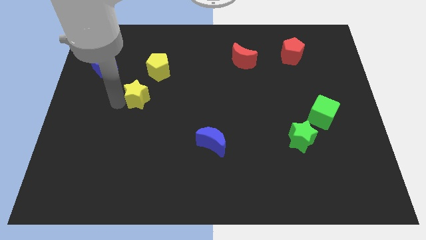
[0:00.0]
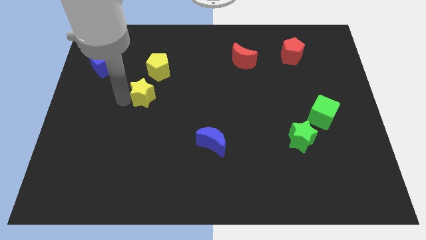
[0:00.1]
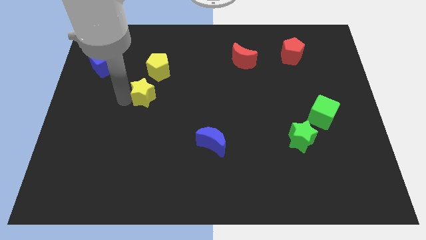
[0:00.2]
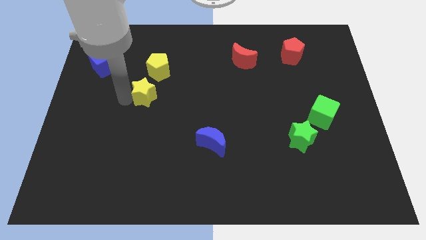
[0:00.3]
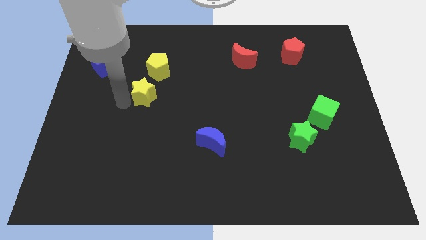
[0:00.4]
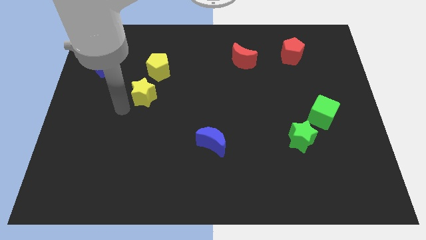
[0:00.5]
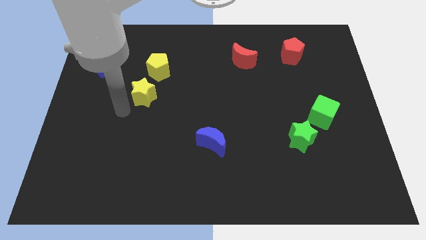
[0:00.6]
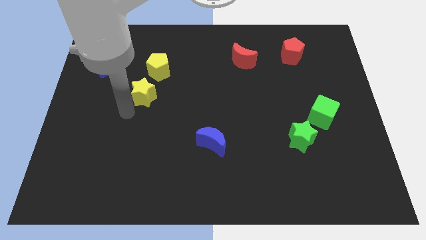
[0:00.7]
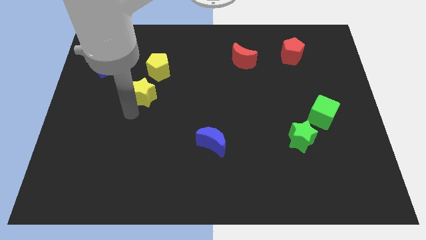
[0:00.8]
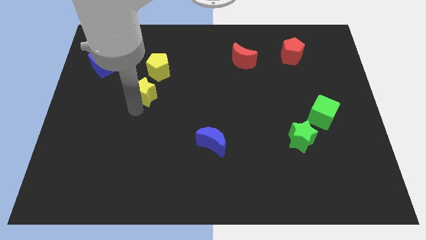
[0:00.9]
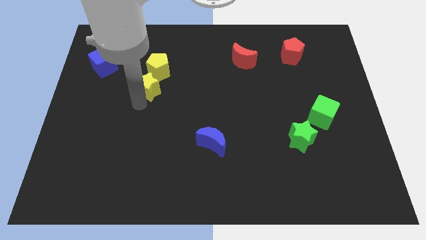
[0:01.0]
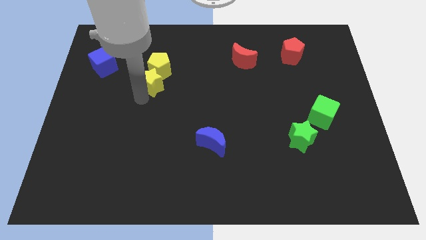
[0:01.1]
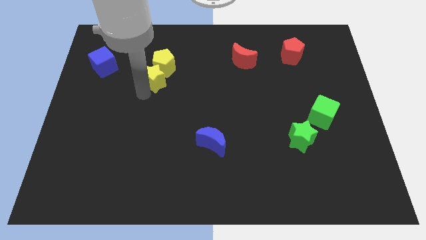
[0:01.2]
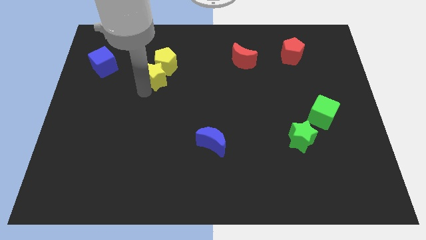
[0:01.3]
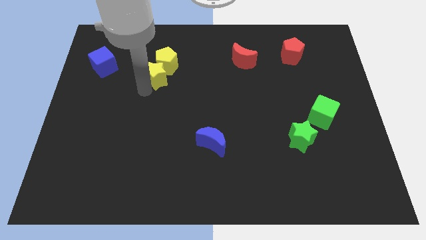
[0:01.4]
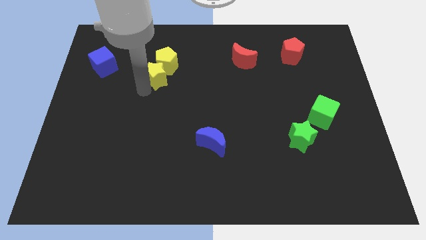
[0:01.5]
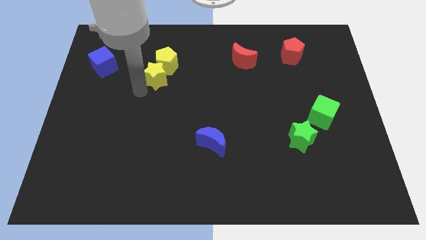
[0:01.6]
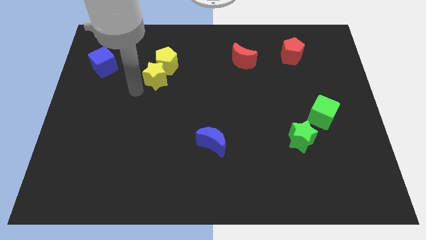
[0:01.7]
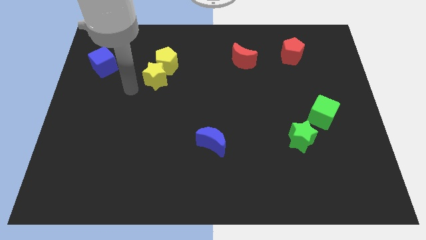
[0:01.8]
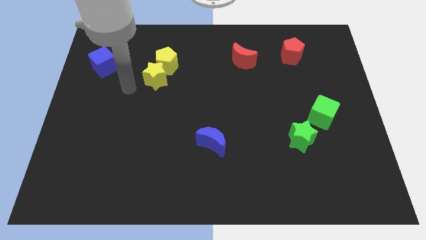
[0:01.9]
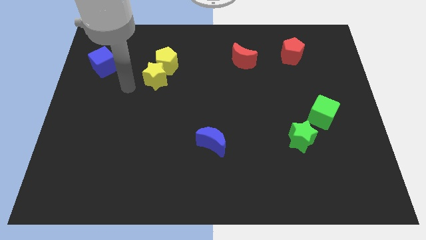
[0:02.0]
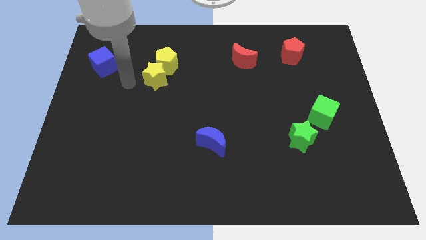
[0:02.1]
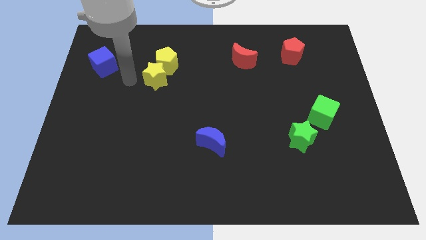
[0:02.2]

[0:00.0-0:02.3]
push the yellow star into the yellow pentagon

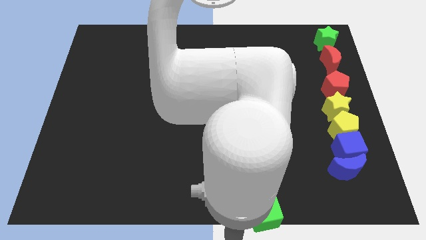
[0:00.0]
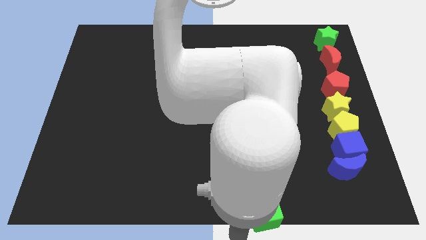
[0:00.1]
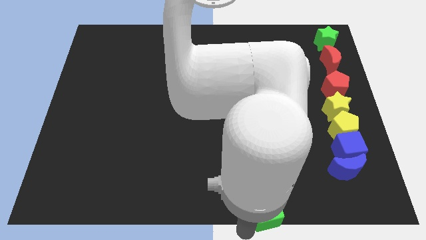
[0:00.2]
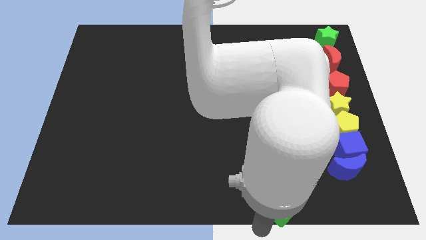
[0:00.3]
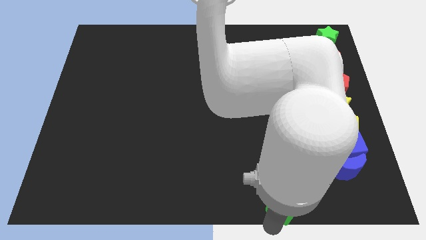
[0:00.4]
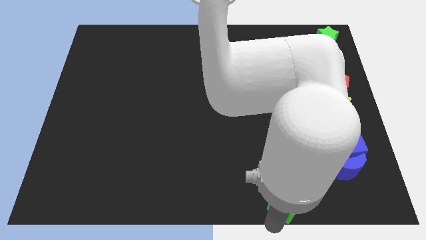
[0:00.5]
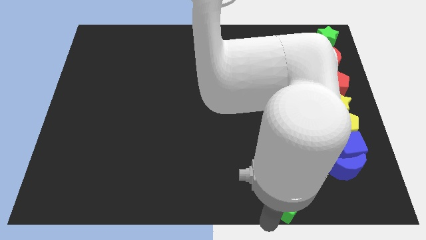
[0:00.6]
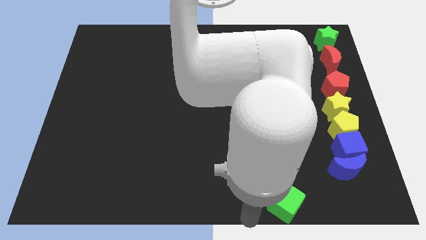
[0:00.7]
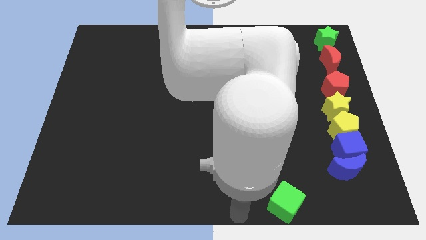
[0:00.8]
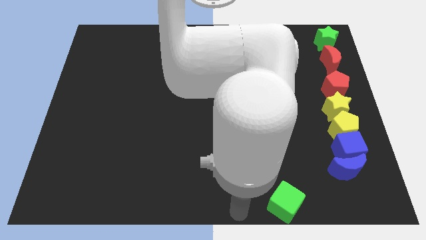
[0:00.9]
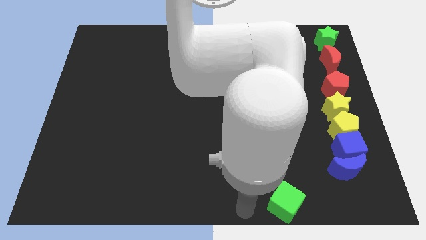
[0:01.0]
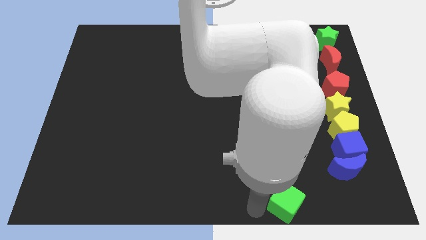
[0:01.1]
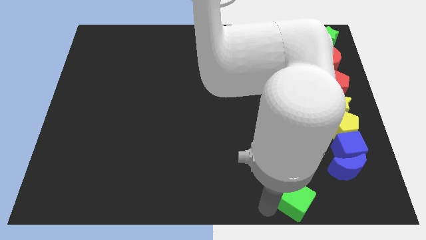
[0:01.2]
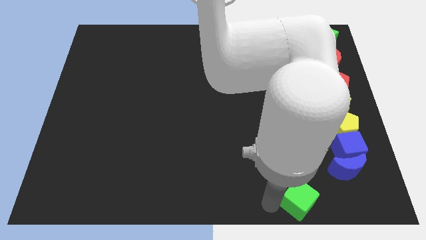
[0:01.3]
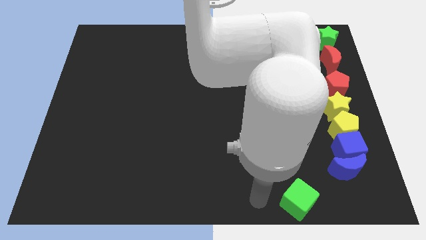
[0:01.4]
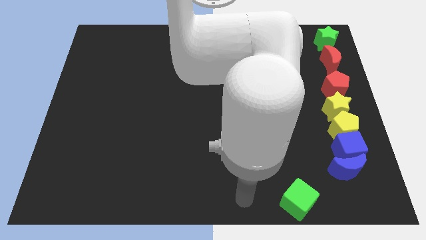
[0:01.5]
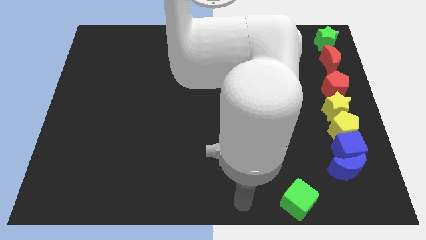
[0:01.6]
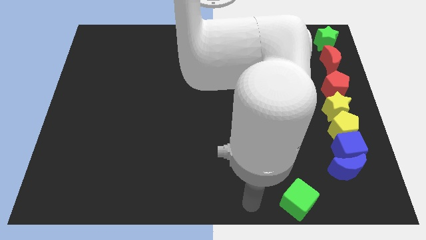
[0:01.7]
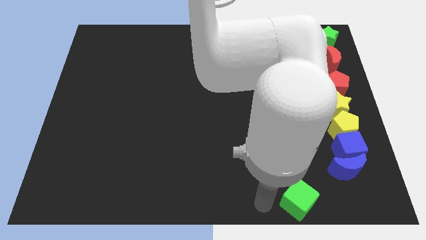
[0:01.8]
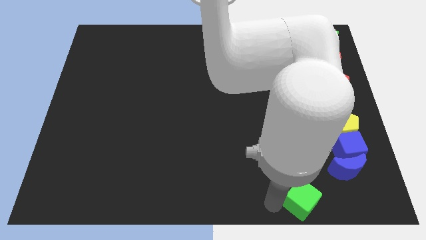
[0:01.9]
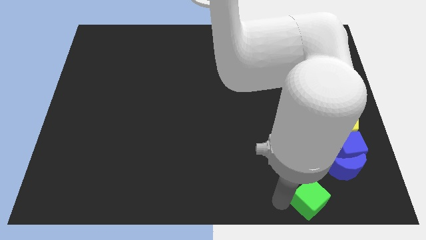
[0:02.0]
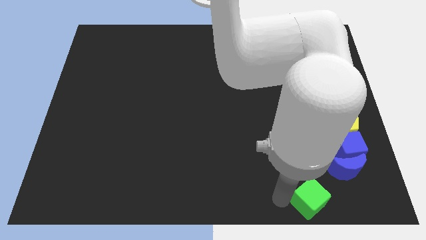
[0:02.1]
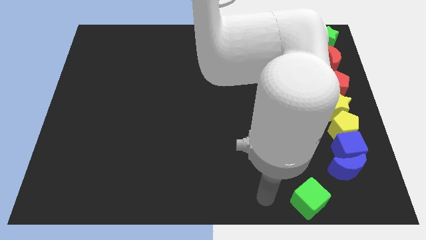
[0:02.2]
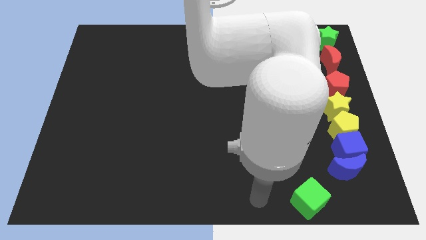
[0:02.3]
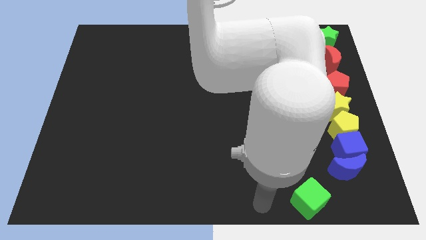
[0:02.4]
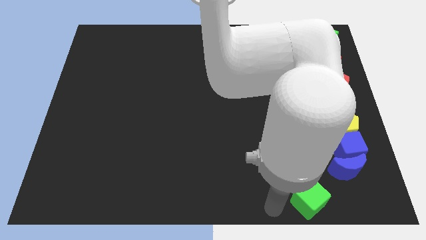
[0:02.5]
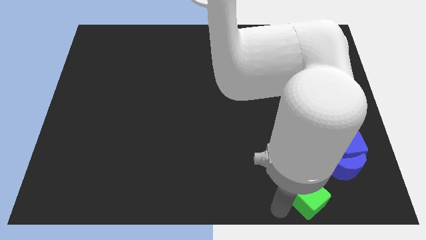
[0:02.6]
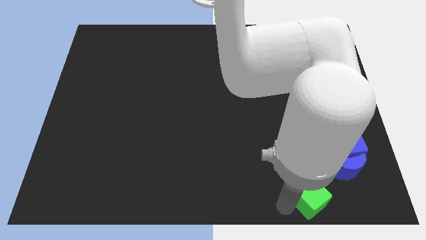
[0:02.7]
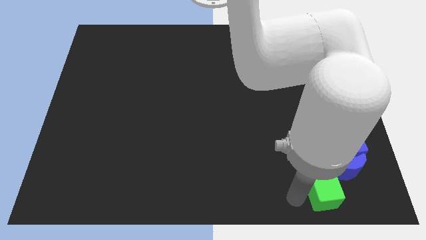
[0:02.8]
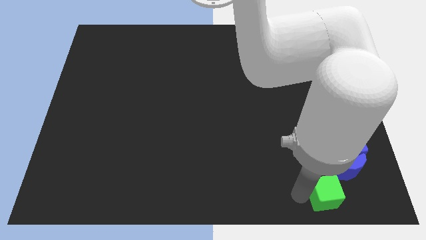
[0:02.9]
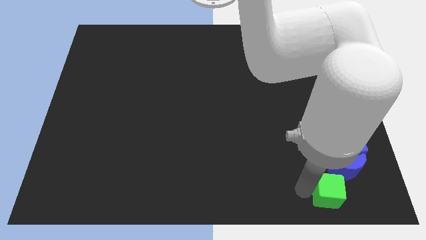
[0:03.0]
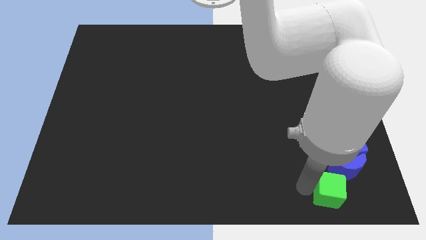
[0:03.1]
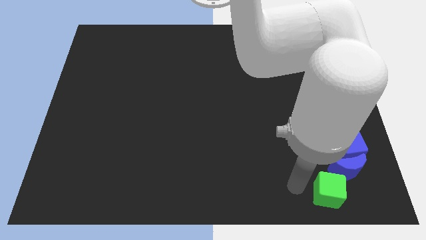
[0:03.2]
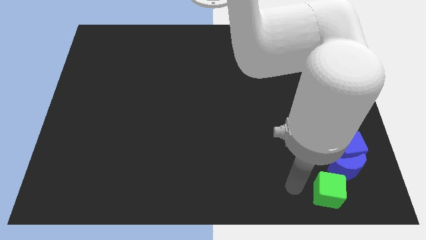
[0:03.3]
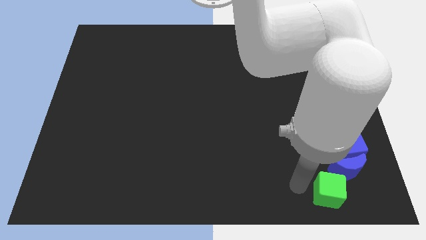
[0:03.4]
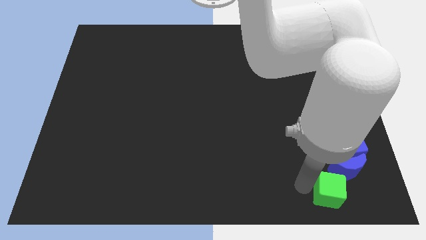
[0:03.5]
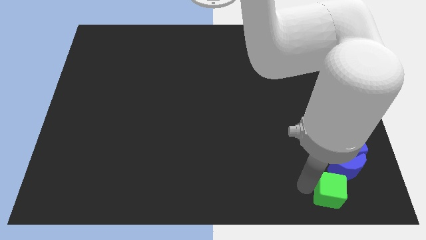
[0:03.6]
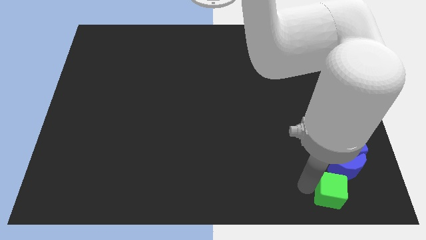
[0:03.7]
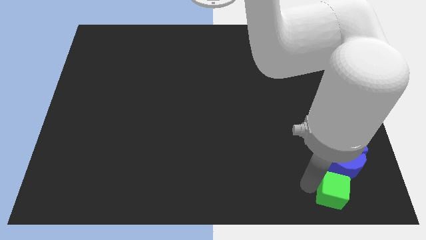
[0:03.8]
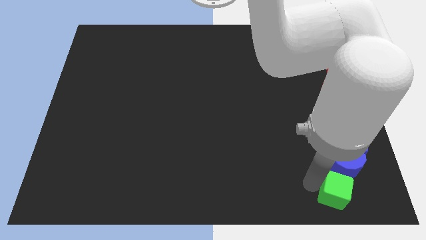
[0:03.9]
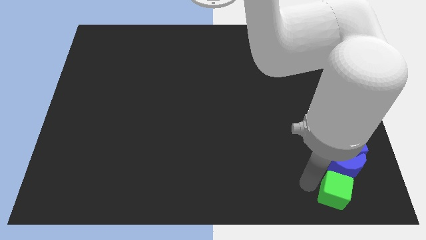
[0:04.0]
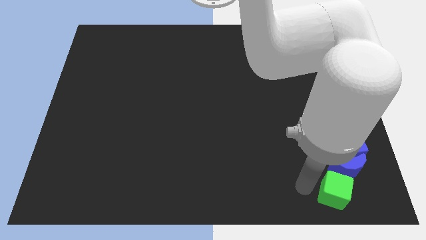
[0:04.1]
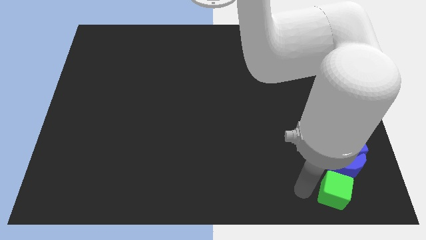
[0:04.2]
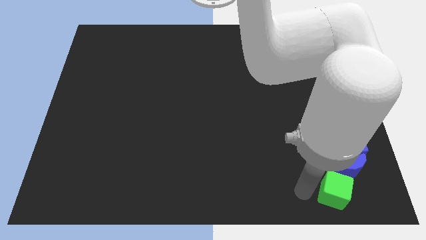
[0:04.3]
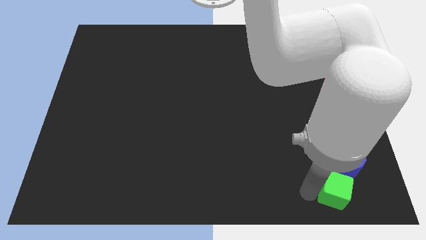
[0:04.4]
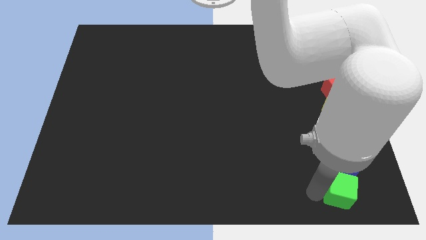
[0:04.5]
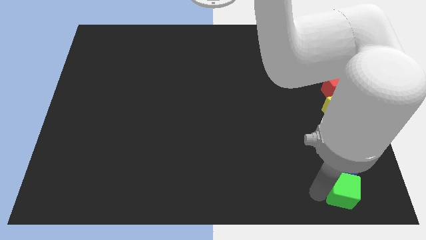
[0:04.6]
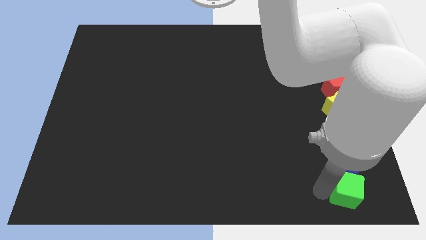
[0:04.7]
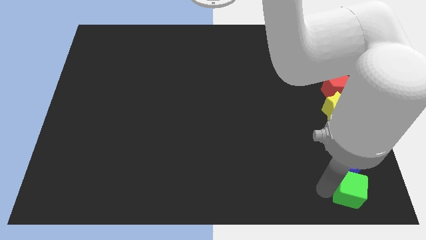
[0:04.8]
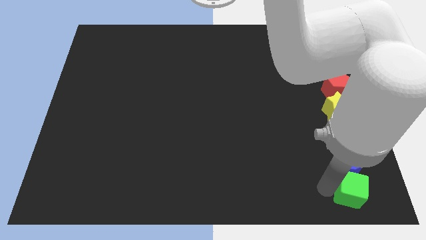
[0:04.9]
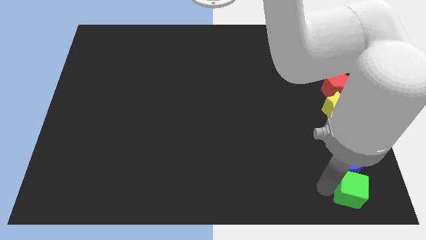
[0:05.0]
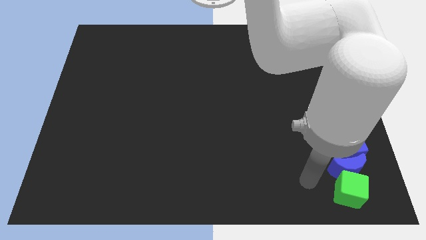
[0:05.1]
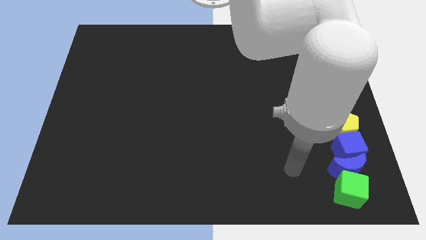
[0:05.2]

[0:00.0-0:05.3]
place the green cube at the bottom side of the blue crescent

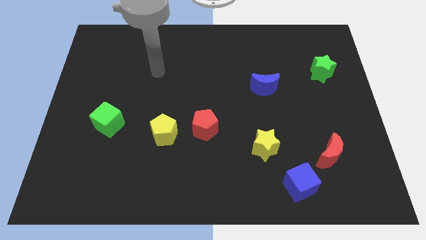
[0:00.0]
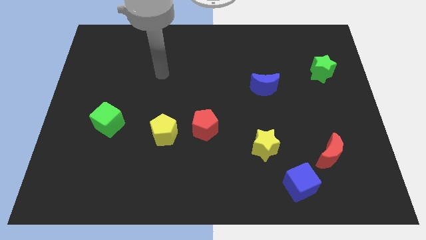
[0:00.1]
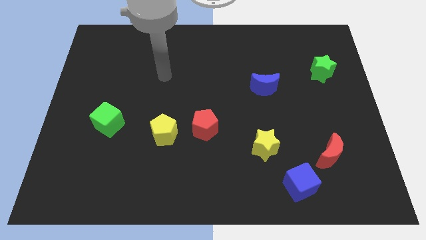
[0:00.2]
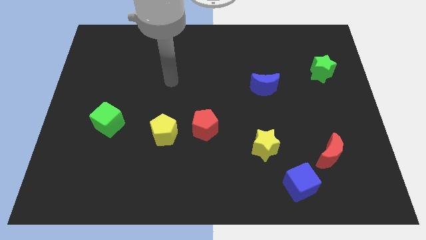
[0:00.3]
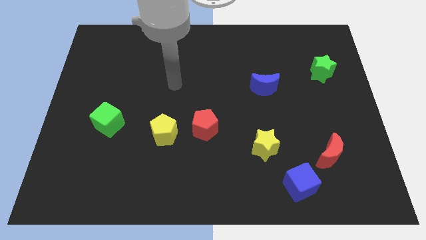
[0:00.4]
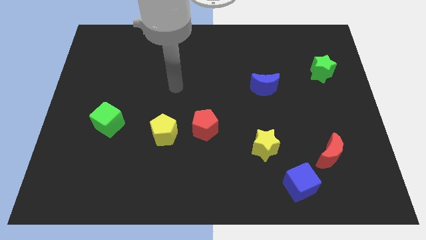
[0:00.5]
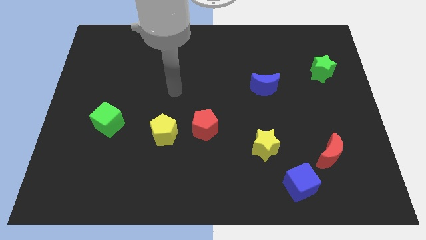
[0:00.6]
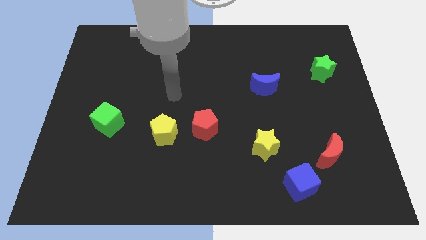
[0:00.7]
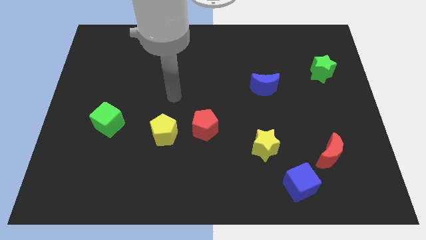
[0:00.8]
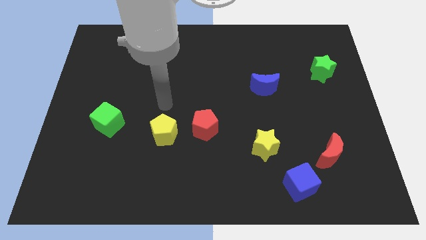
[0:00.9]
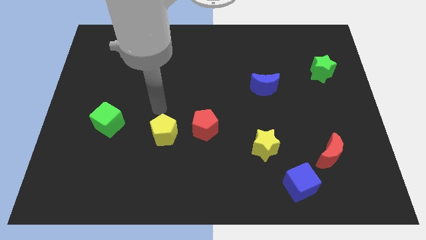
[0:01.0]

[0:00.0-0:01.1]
move your arm close to yellow pentagon

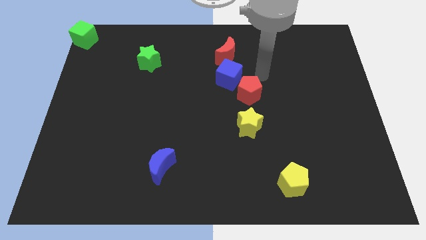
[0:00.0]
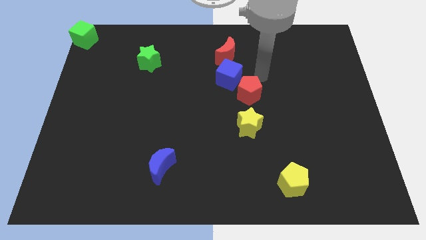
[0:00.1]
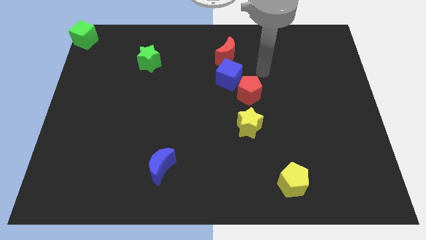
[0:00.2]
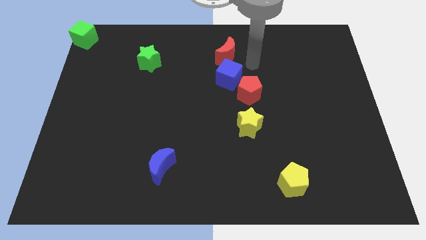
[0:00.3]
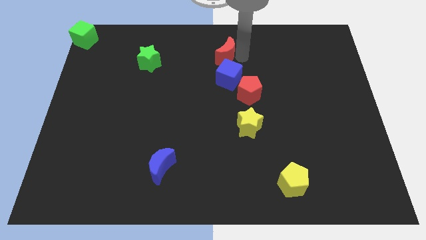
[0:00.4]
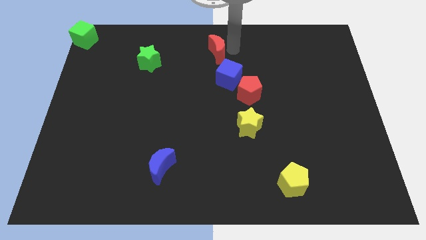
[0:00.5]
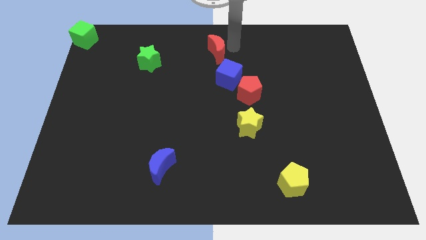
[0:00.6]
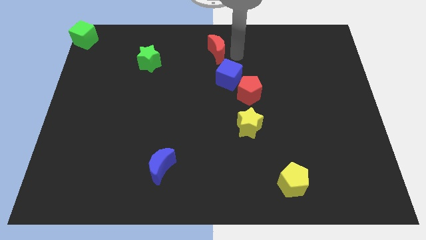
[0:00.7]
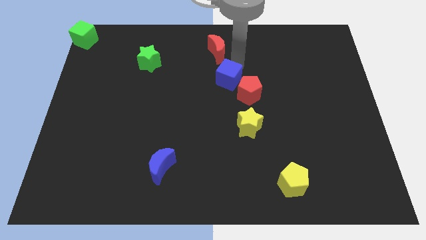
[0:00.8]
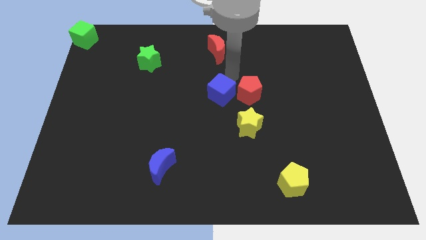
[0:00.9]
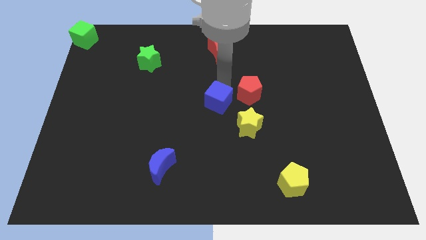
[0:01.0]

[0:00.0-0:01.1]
place blue cube to the left of red pentagon
